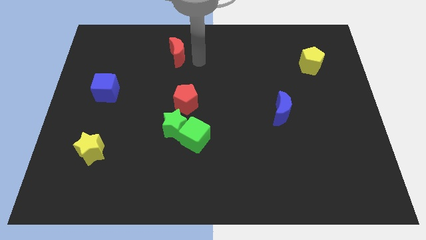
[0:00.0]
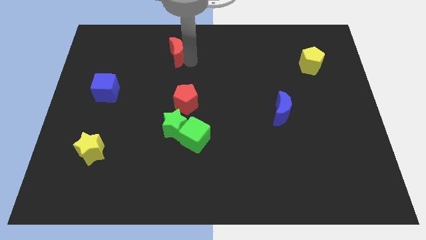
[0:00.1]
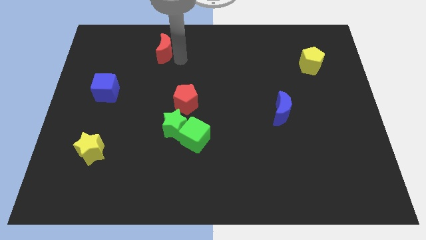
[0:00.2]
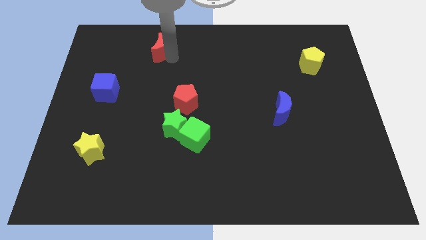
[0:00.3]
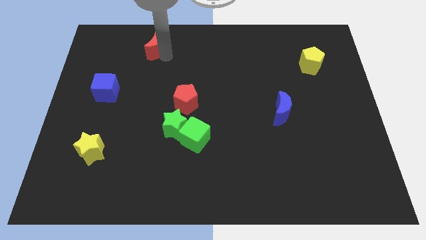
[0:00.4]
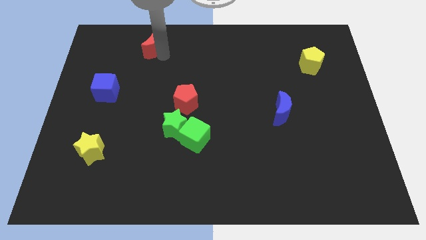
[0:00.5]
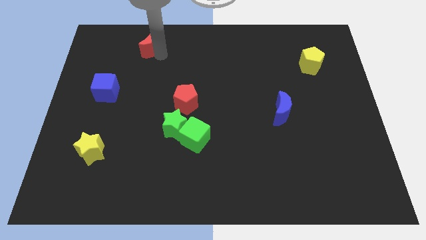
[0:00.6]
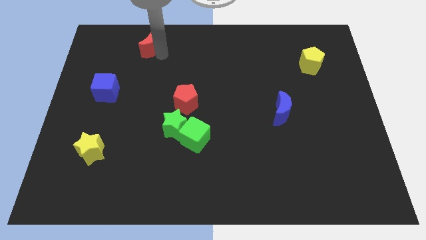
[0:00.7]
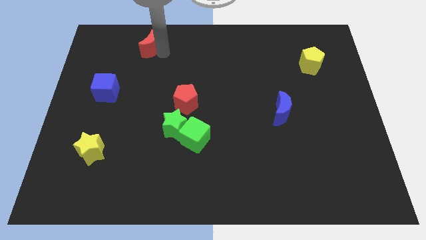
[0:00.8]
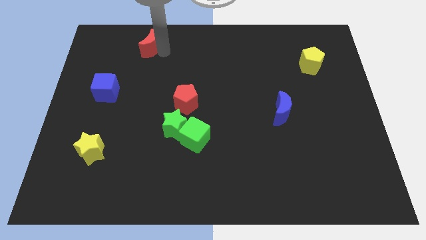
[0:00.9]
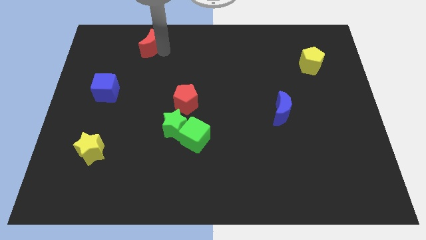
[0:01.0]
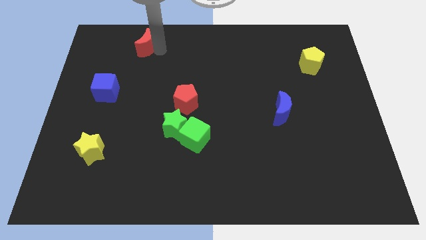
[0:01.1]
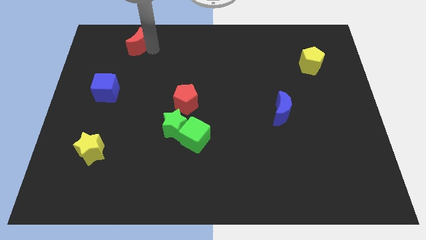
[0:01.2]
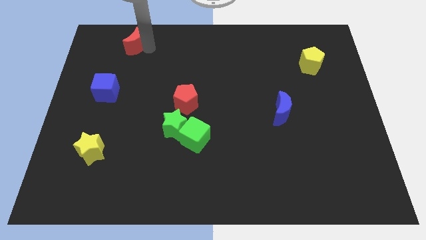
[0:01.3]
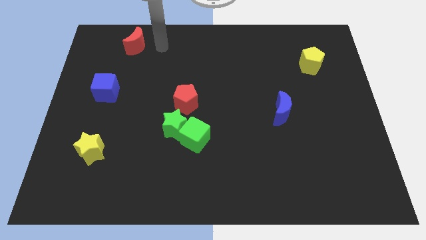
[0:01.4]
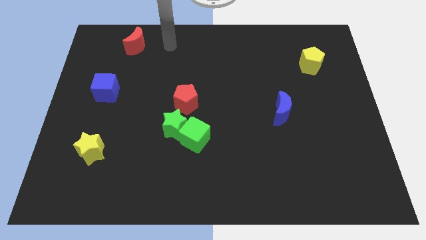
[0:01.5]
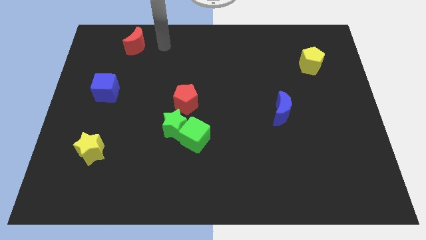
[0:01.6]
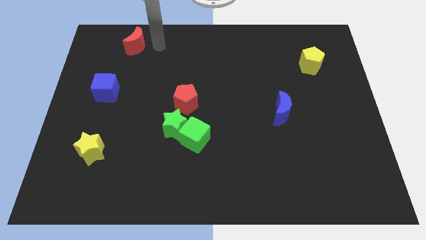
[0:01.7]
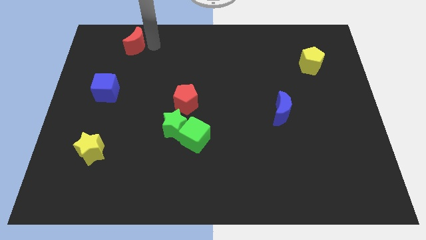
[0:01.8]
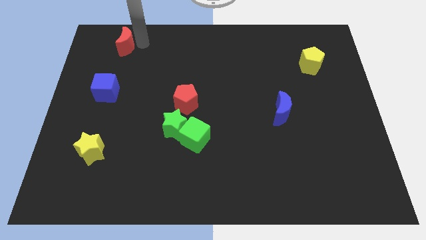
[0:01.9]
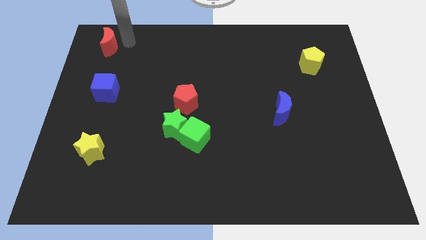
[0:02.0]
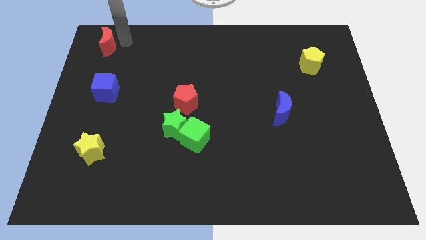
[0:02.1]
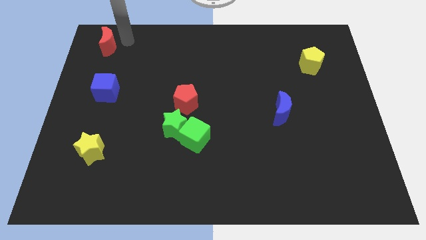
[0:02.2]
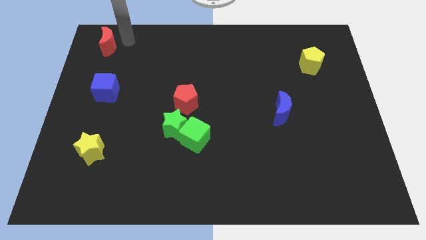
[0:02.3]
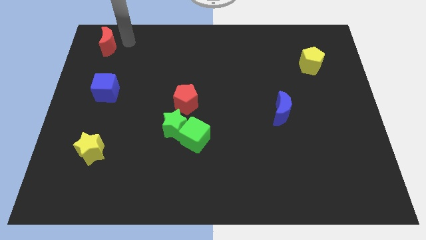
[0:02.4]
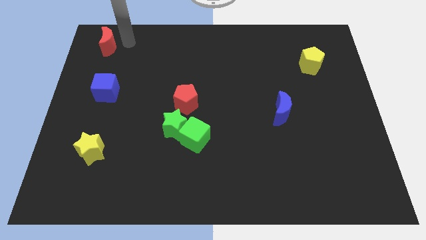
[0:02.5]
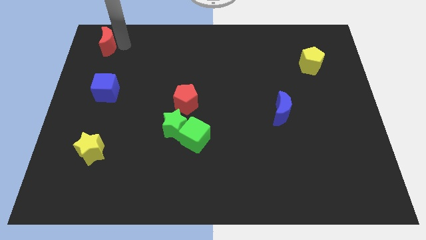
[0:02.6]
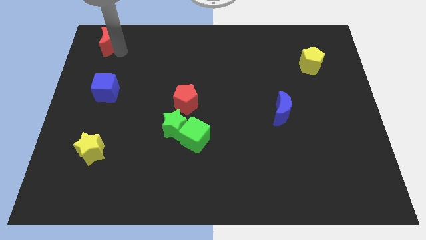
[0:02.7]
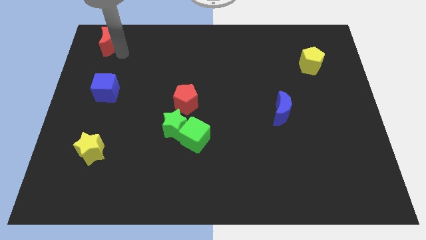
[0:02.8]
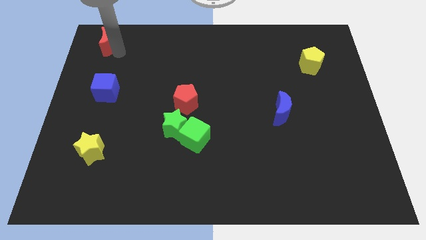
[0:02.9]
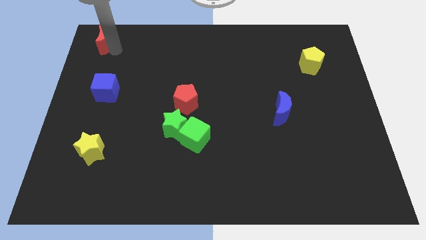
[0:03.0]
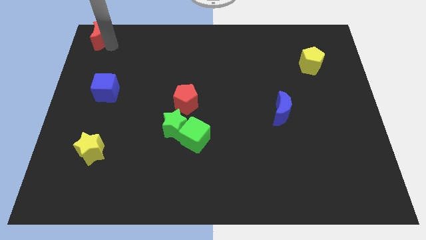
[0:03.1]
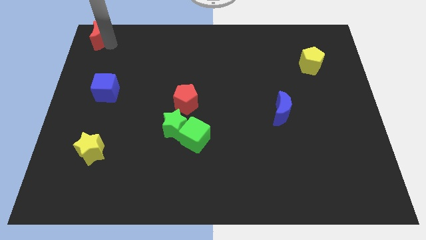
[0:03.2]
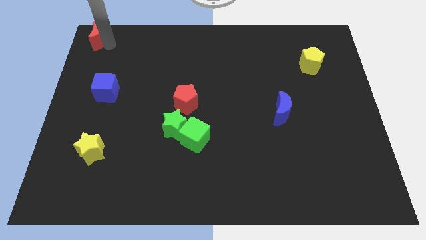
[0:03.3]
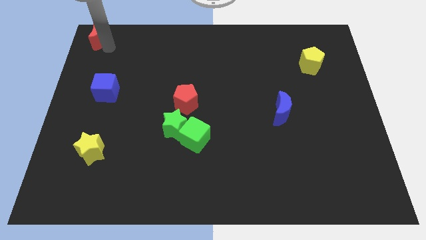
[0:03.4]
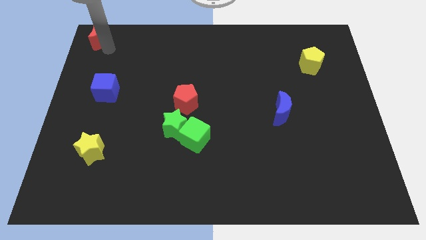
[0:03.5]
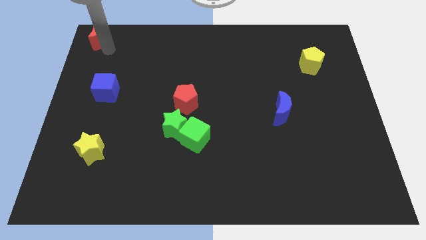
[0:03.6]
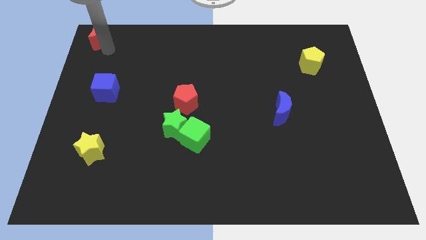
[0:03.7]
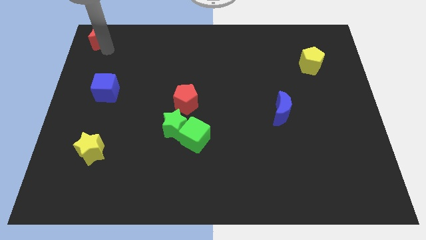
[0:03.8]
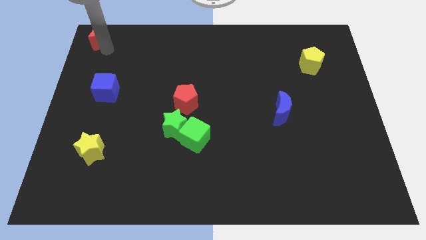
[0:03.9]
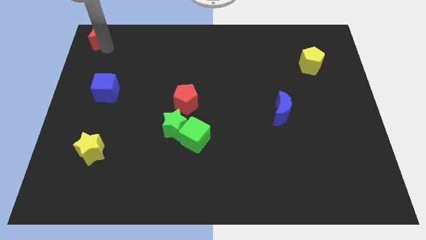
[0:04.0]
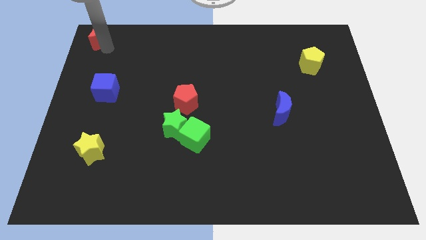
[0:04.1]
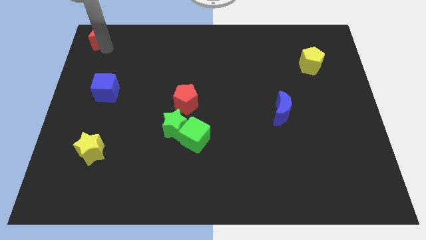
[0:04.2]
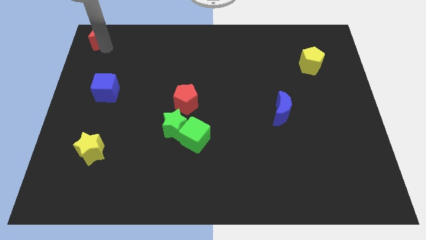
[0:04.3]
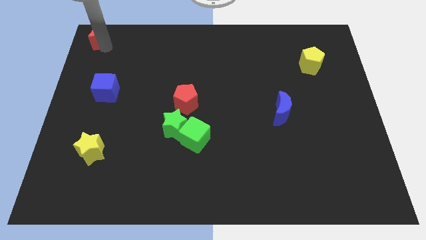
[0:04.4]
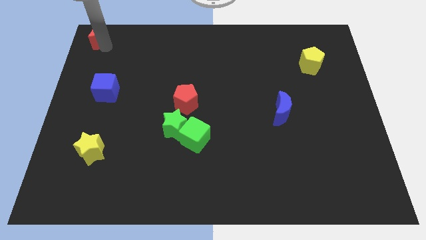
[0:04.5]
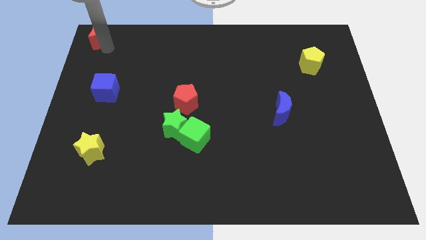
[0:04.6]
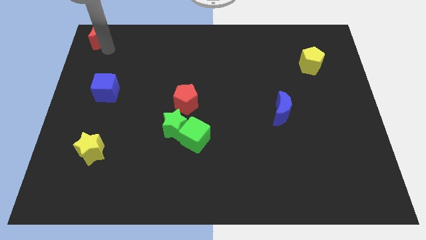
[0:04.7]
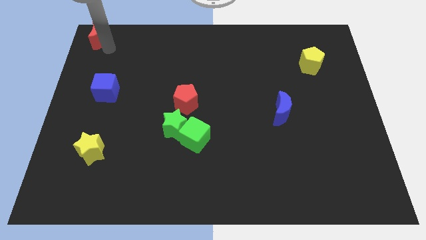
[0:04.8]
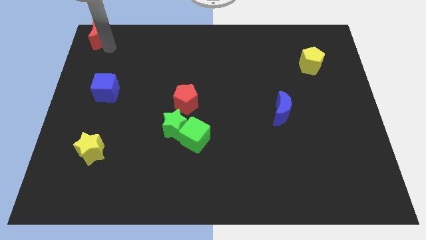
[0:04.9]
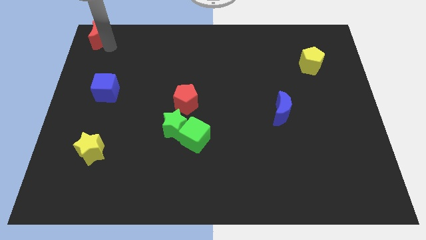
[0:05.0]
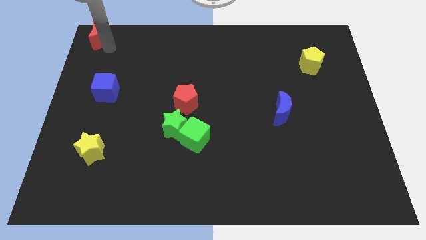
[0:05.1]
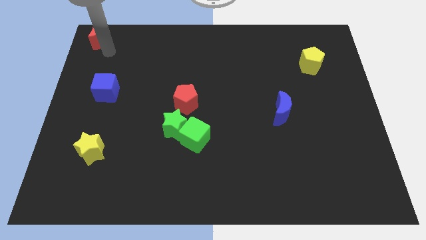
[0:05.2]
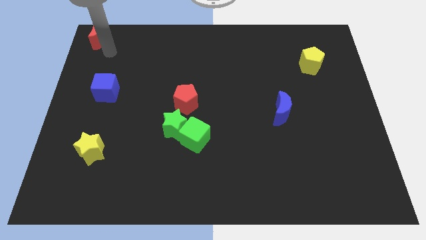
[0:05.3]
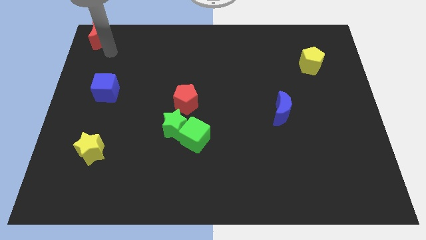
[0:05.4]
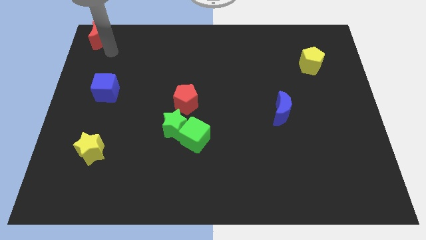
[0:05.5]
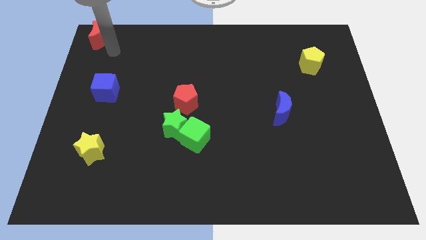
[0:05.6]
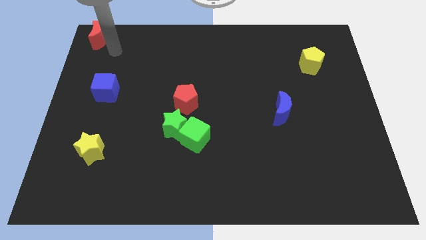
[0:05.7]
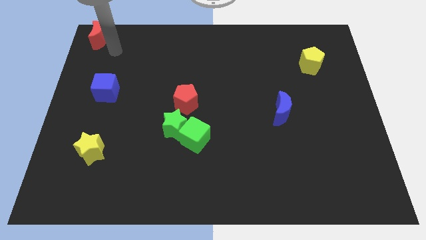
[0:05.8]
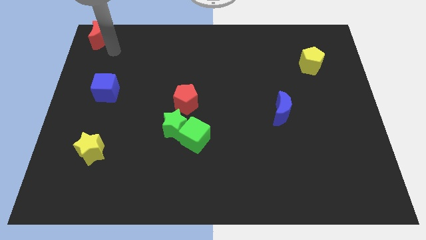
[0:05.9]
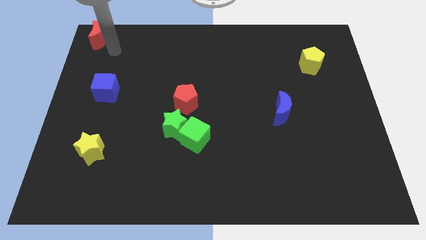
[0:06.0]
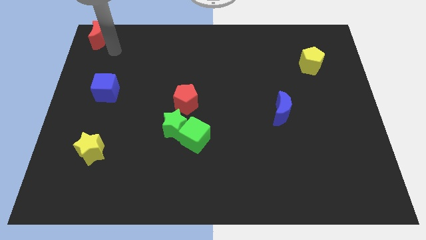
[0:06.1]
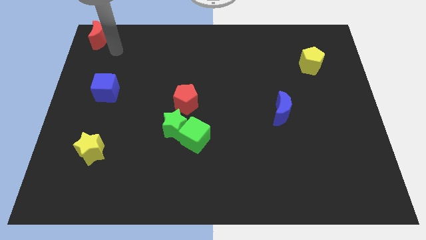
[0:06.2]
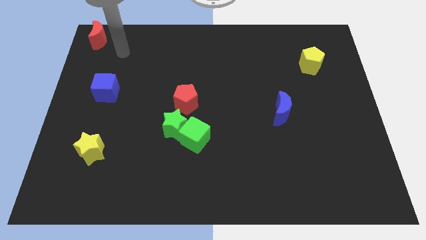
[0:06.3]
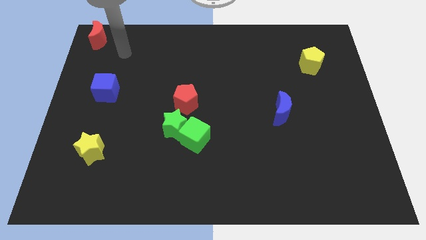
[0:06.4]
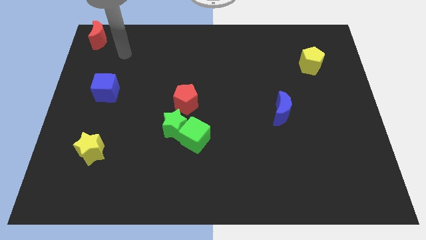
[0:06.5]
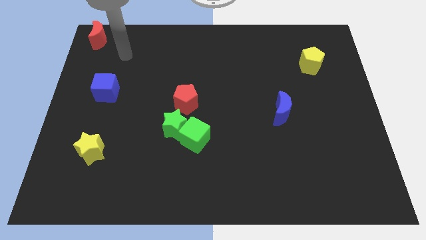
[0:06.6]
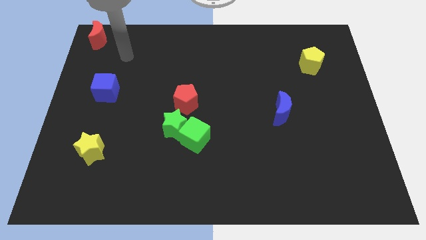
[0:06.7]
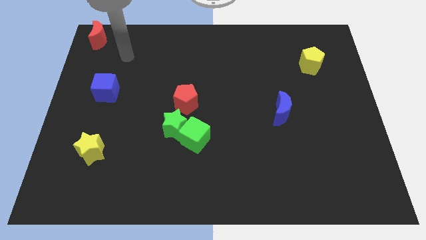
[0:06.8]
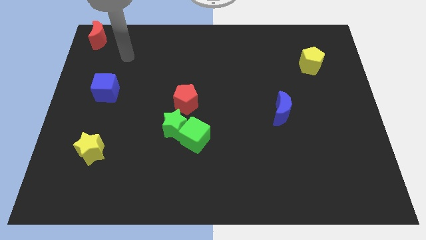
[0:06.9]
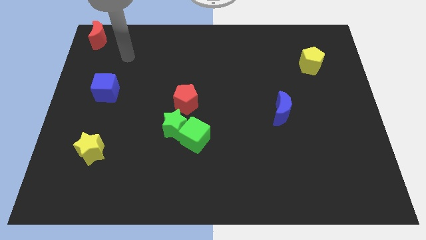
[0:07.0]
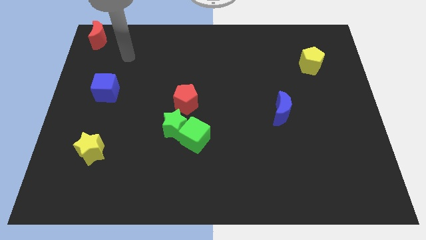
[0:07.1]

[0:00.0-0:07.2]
place the red crescent to the top left of the board

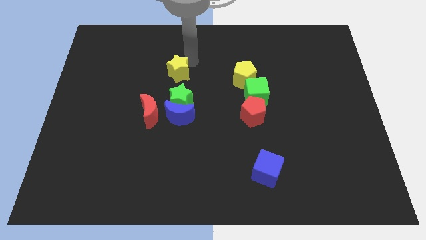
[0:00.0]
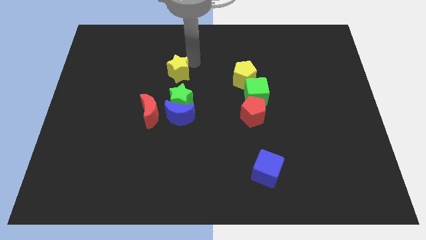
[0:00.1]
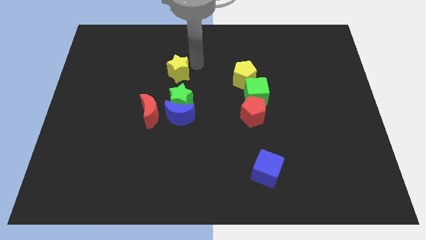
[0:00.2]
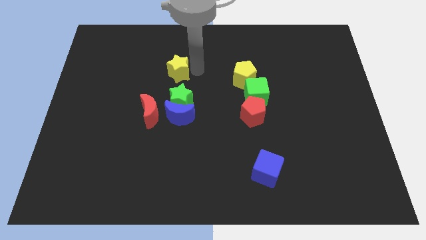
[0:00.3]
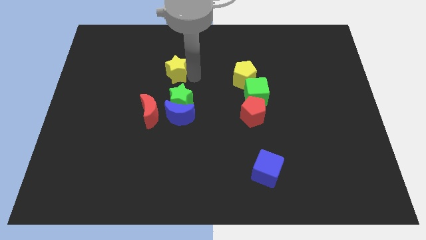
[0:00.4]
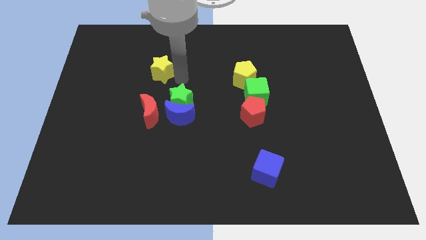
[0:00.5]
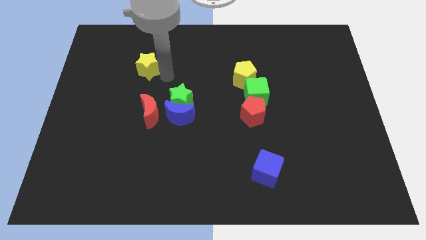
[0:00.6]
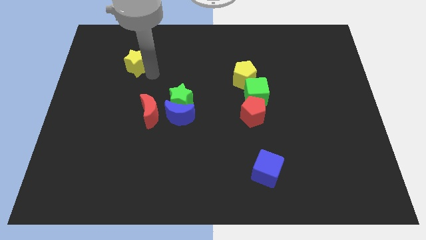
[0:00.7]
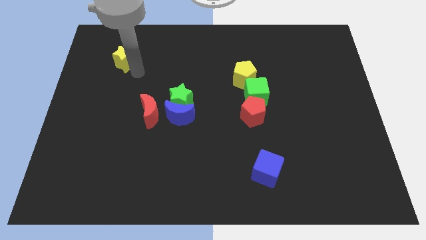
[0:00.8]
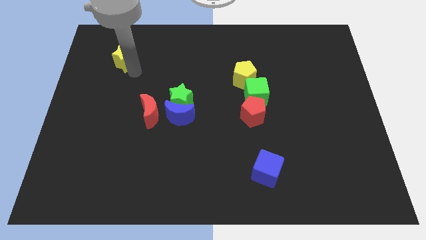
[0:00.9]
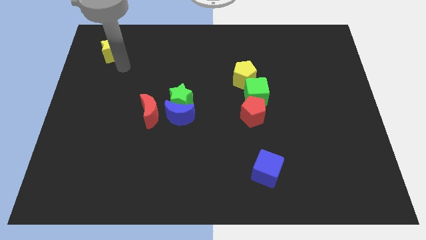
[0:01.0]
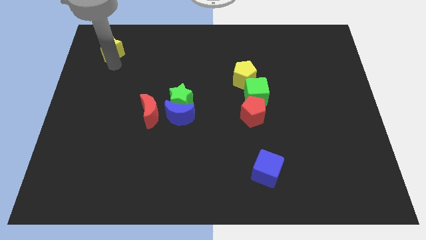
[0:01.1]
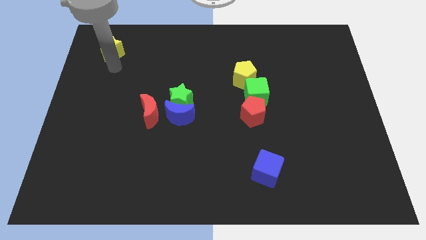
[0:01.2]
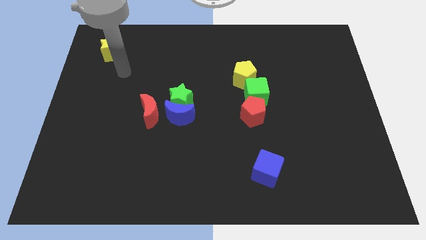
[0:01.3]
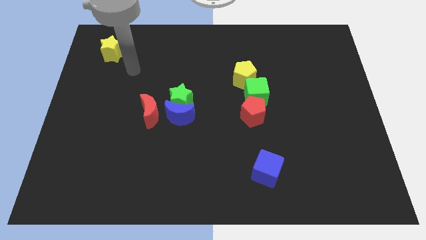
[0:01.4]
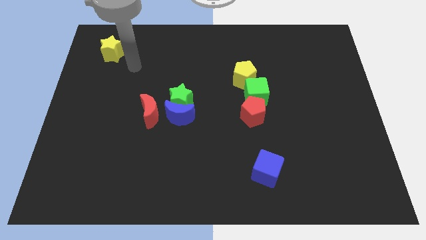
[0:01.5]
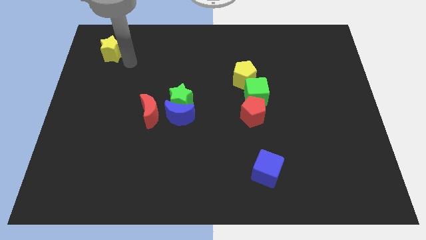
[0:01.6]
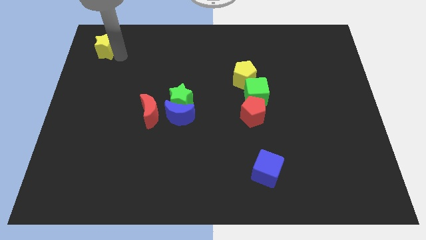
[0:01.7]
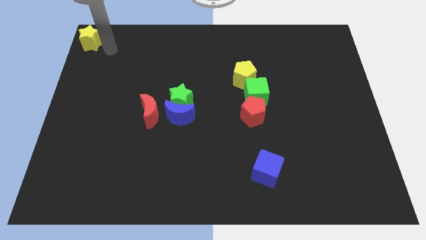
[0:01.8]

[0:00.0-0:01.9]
push the yellow star towards the top left corner of the board
